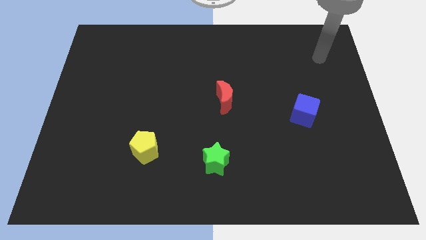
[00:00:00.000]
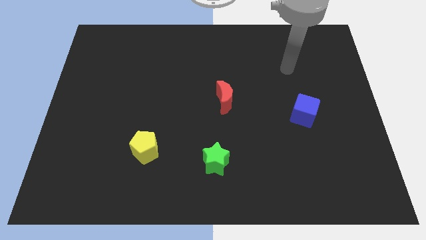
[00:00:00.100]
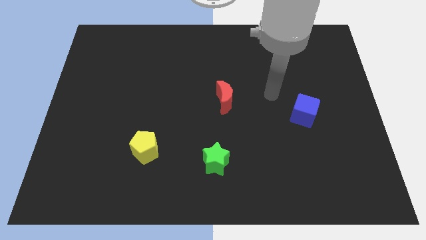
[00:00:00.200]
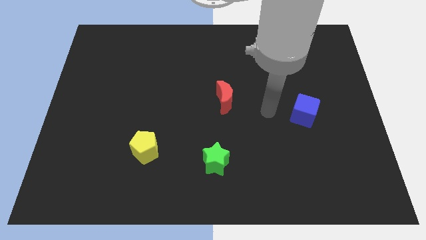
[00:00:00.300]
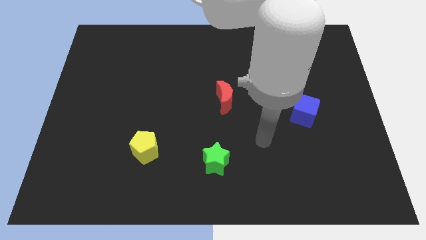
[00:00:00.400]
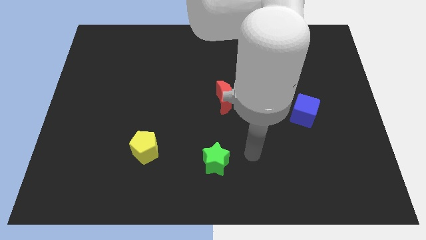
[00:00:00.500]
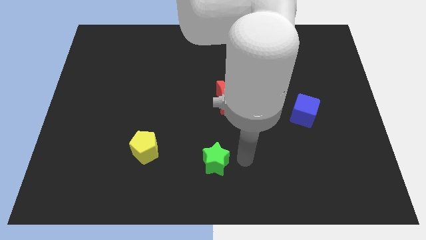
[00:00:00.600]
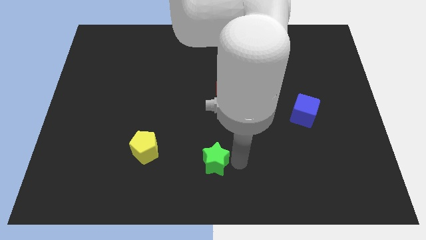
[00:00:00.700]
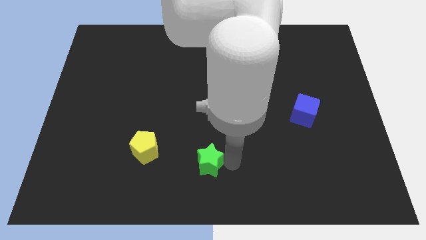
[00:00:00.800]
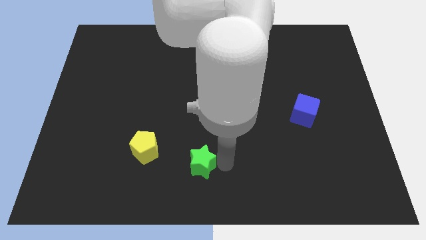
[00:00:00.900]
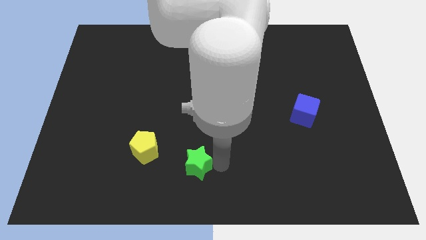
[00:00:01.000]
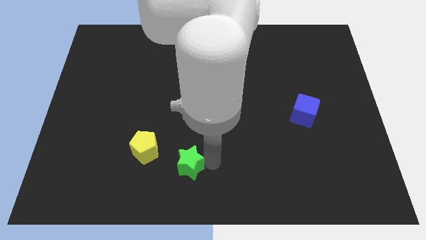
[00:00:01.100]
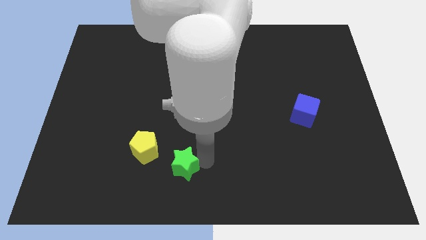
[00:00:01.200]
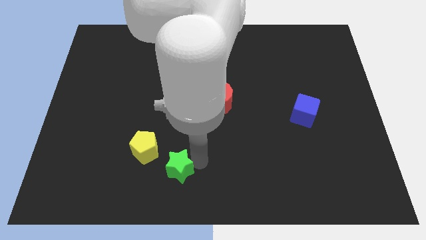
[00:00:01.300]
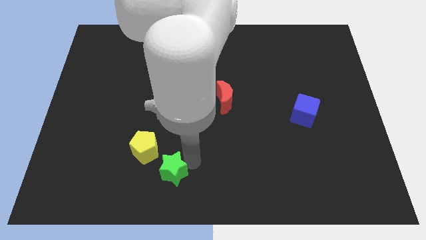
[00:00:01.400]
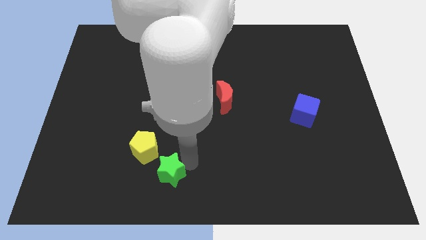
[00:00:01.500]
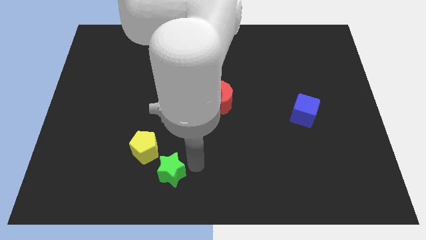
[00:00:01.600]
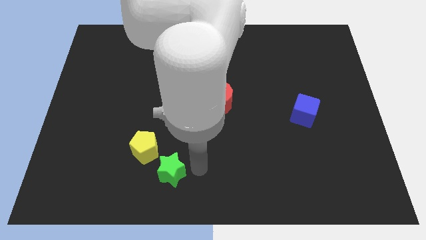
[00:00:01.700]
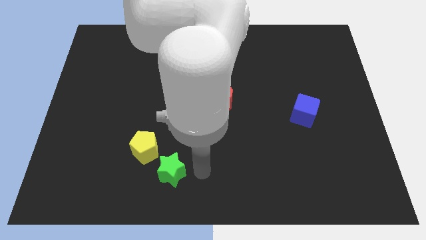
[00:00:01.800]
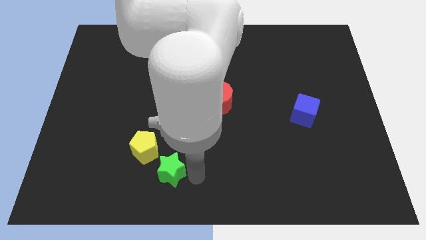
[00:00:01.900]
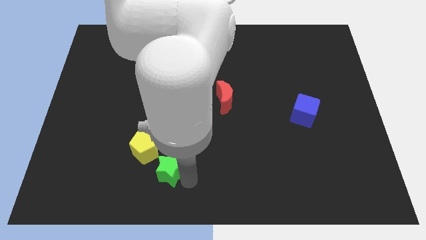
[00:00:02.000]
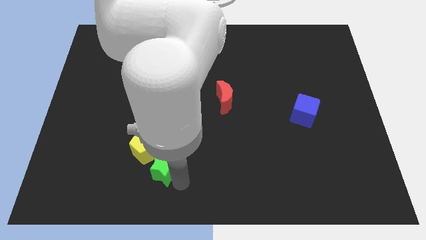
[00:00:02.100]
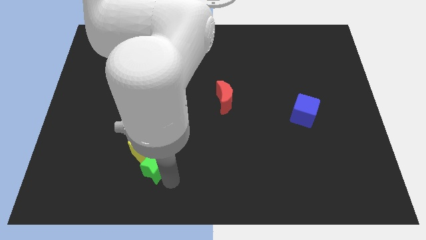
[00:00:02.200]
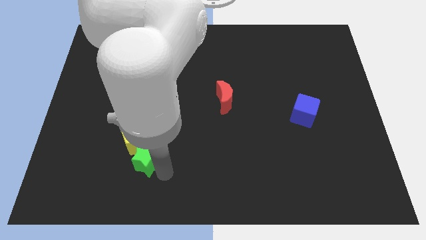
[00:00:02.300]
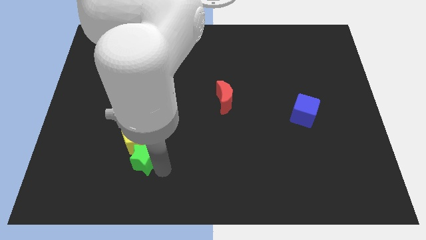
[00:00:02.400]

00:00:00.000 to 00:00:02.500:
slide the green block towards the pentagon

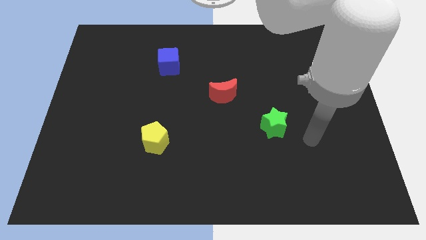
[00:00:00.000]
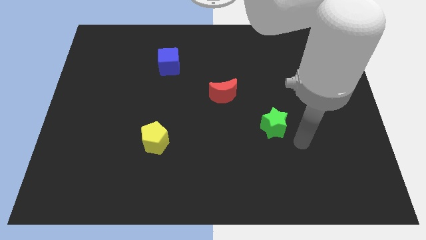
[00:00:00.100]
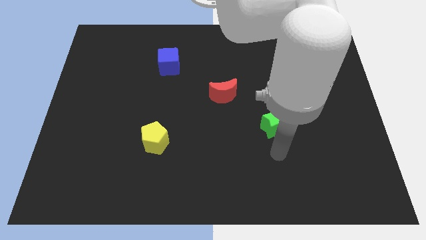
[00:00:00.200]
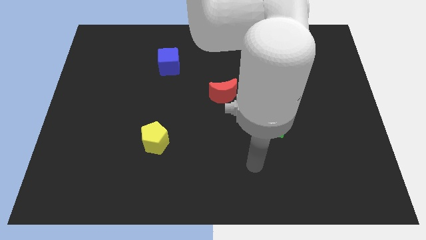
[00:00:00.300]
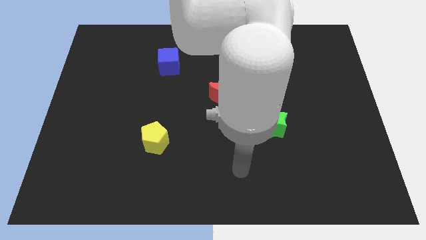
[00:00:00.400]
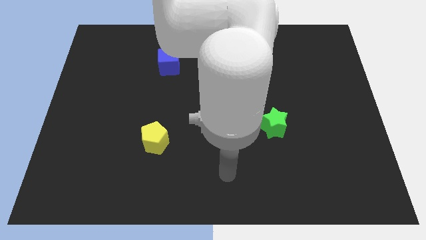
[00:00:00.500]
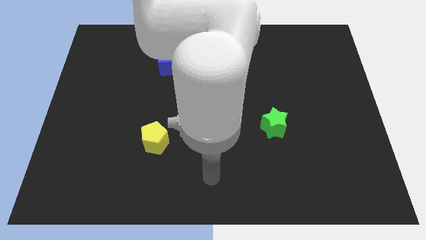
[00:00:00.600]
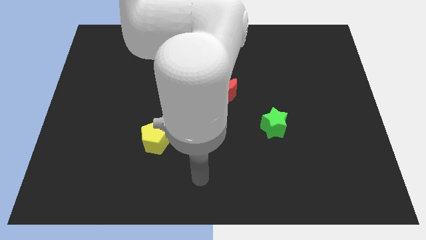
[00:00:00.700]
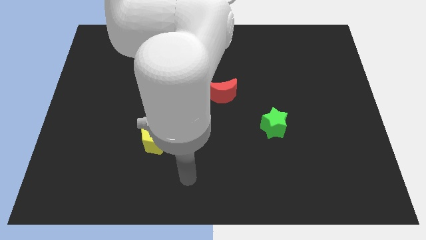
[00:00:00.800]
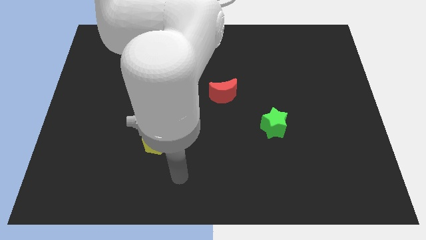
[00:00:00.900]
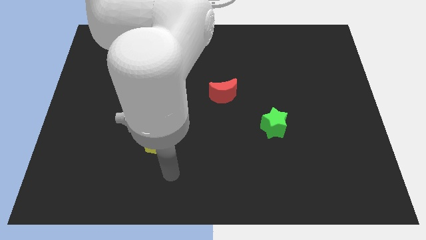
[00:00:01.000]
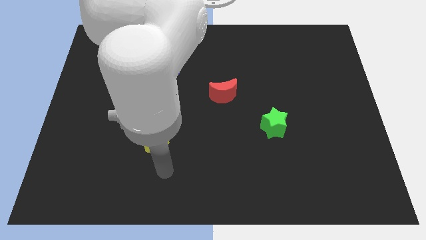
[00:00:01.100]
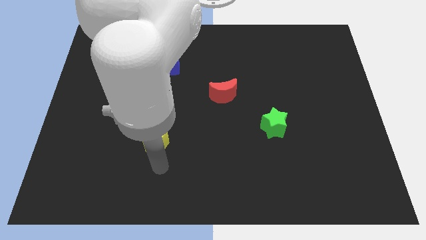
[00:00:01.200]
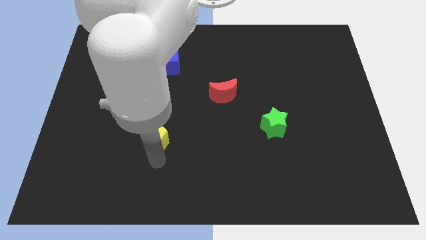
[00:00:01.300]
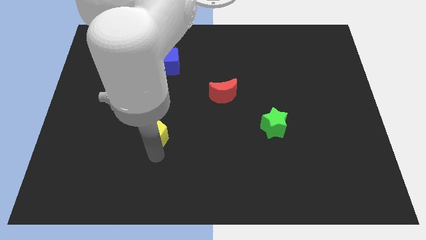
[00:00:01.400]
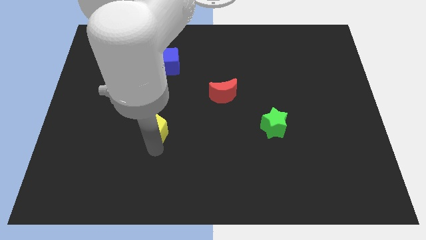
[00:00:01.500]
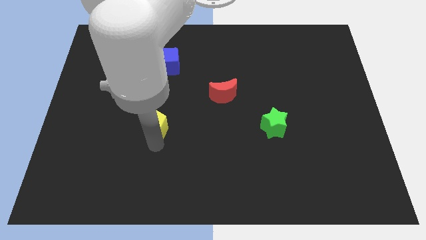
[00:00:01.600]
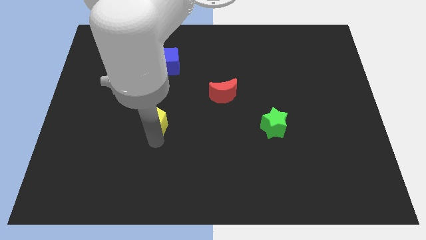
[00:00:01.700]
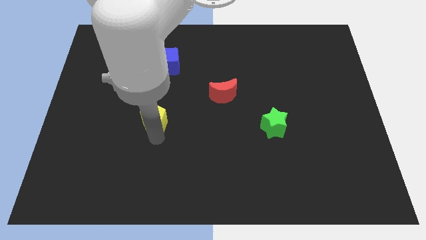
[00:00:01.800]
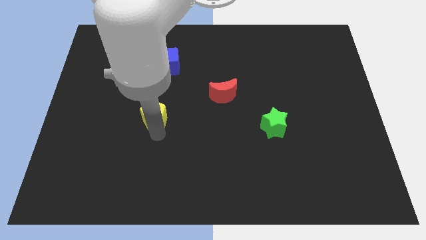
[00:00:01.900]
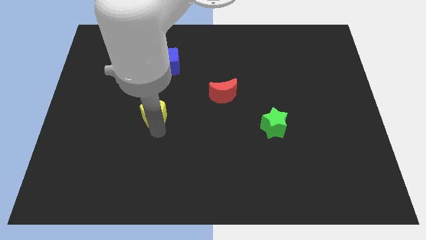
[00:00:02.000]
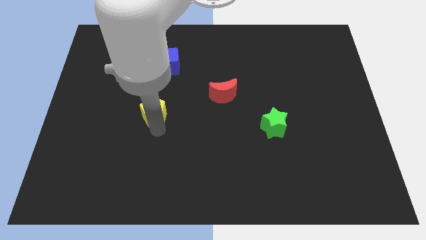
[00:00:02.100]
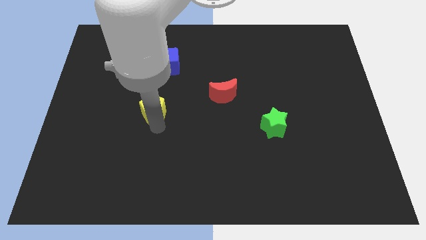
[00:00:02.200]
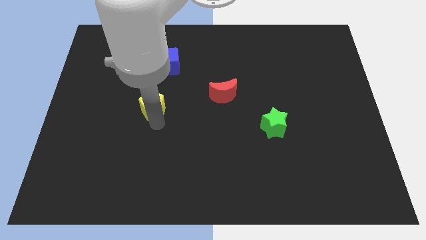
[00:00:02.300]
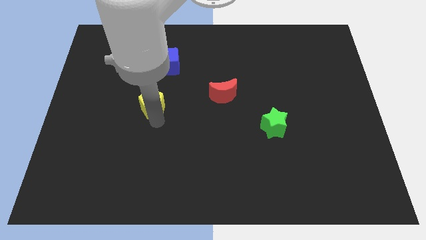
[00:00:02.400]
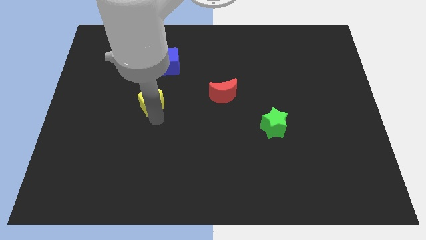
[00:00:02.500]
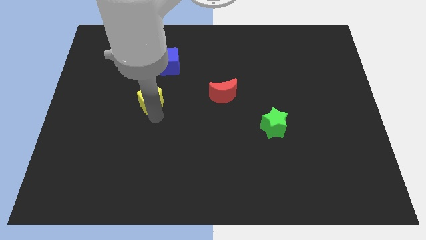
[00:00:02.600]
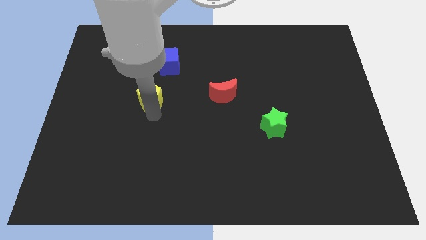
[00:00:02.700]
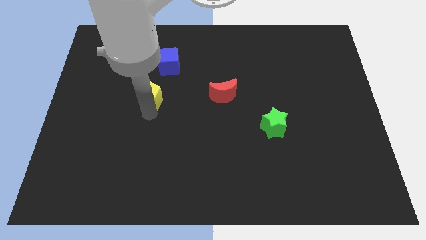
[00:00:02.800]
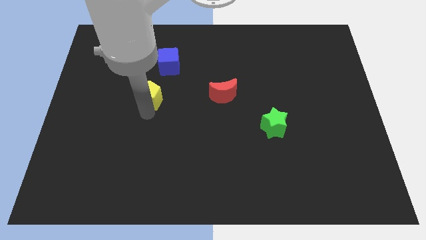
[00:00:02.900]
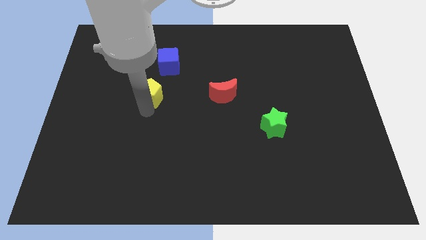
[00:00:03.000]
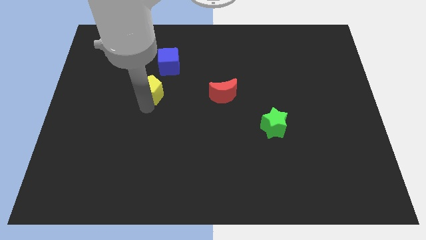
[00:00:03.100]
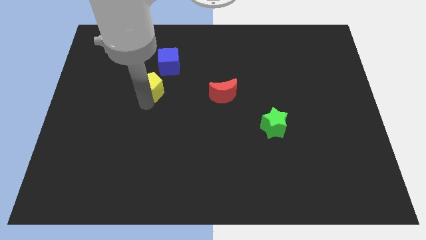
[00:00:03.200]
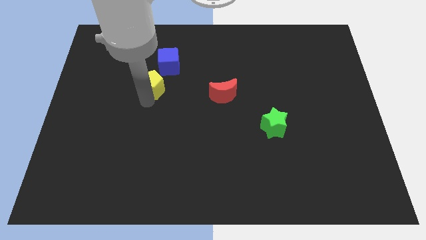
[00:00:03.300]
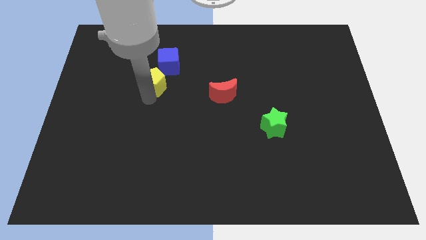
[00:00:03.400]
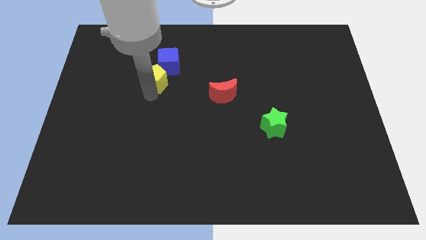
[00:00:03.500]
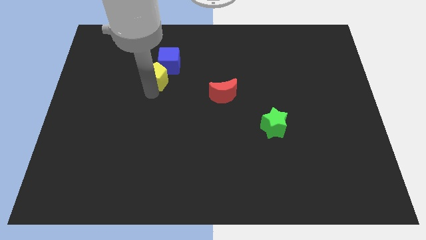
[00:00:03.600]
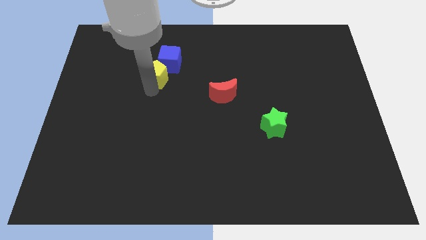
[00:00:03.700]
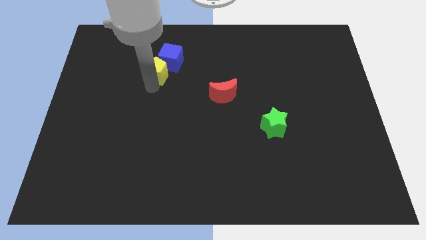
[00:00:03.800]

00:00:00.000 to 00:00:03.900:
move the yellow pentagon to the blue block

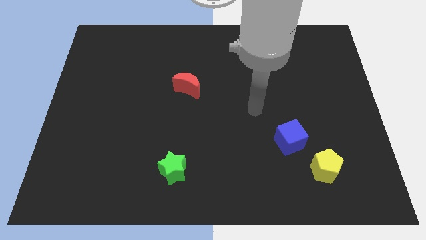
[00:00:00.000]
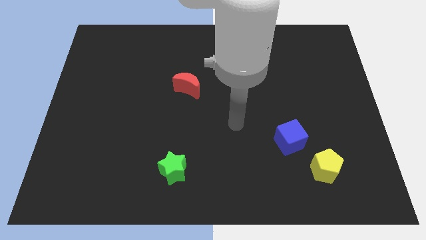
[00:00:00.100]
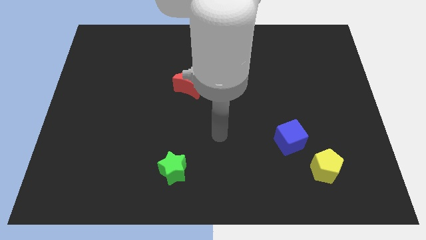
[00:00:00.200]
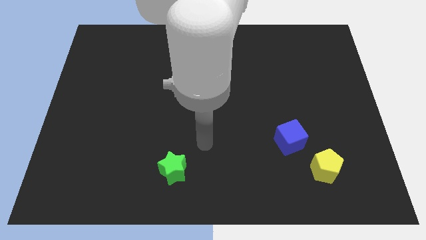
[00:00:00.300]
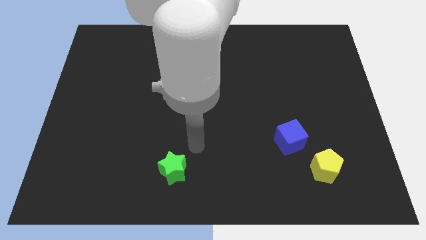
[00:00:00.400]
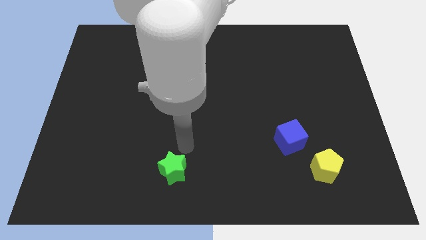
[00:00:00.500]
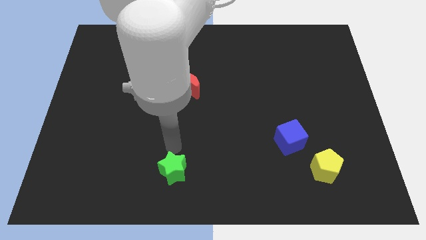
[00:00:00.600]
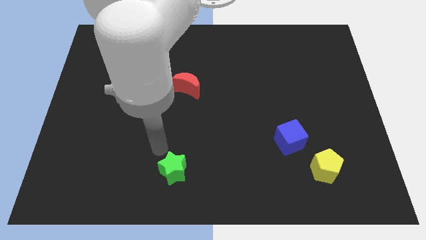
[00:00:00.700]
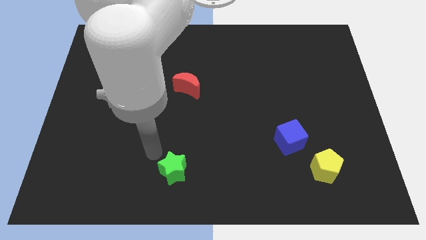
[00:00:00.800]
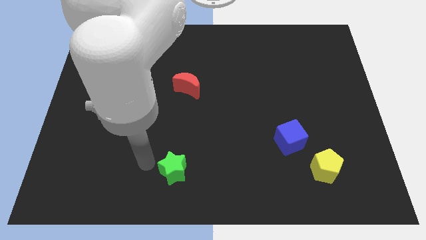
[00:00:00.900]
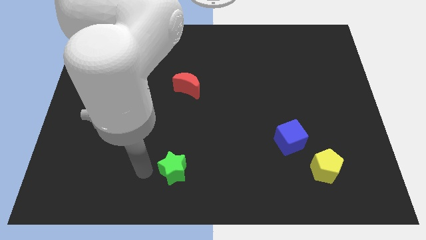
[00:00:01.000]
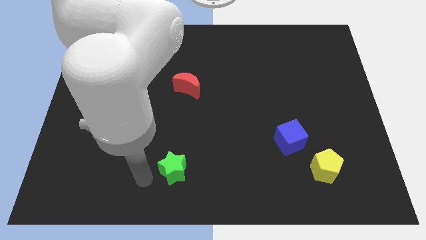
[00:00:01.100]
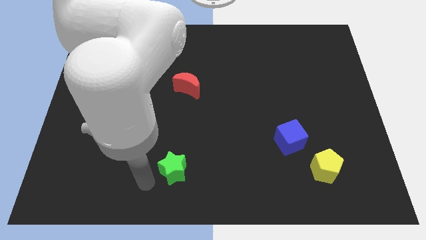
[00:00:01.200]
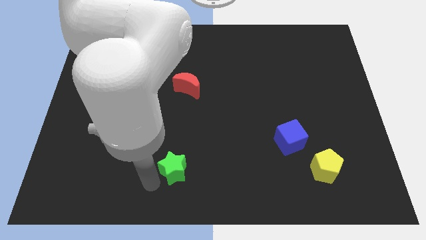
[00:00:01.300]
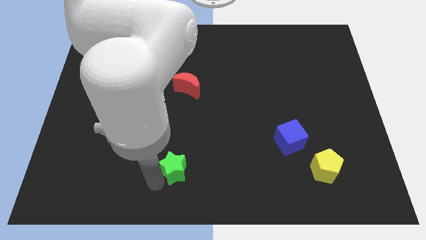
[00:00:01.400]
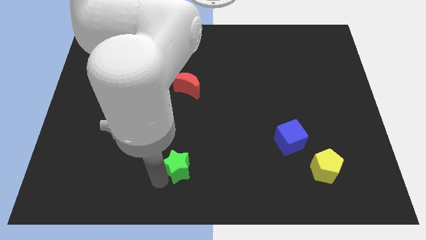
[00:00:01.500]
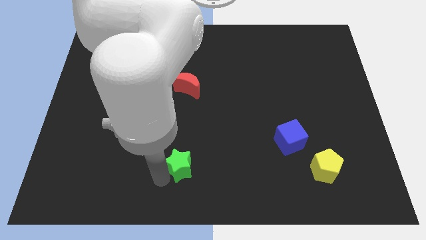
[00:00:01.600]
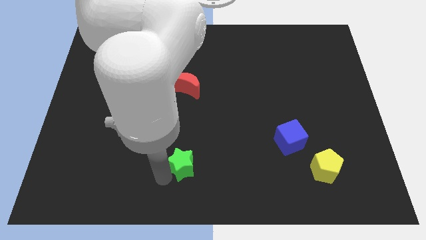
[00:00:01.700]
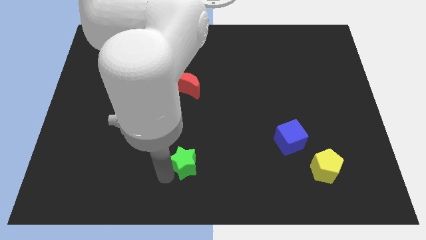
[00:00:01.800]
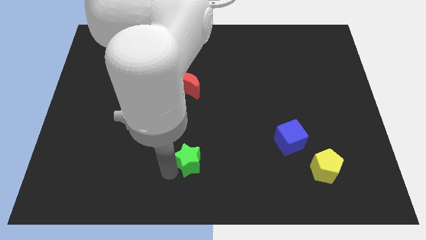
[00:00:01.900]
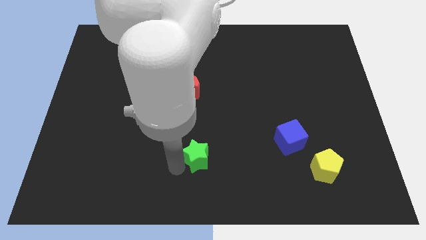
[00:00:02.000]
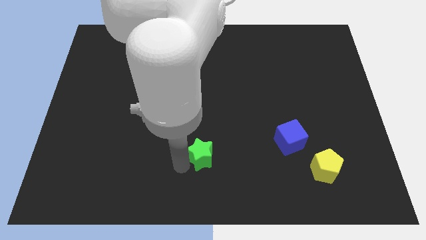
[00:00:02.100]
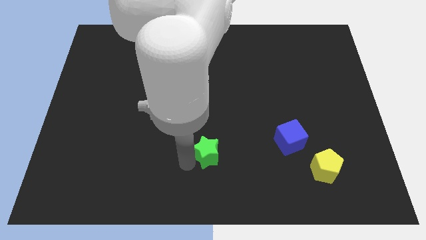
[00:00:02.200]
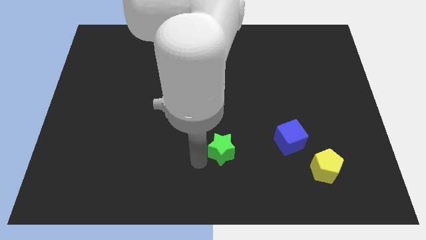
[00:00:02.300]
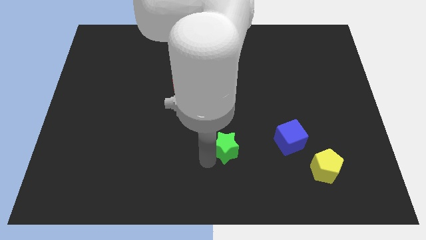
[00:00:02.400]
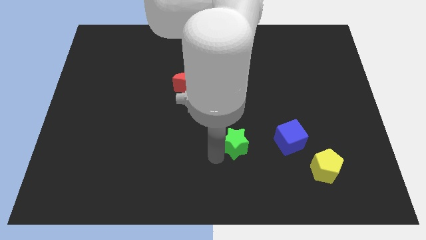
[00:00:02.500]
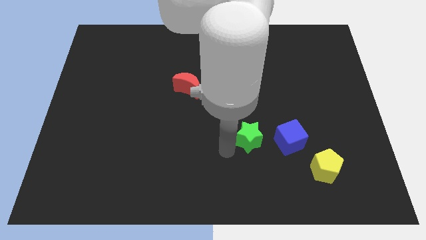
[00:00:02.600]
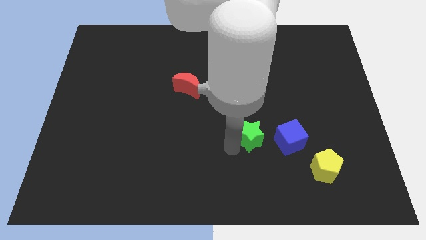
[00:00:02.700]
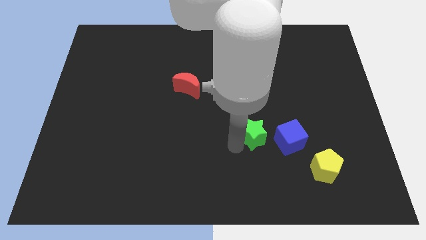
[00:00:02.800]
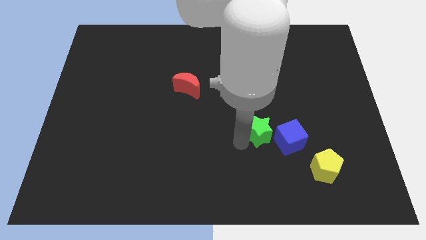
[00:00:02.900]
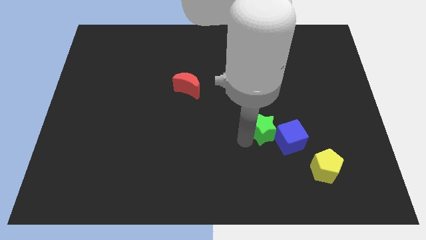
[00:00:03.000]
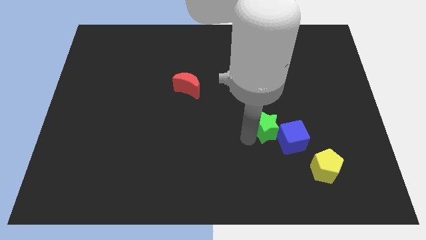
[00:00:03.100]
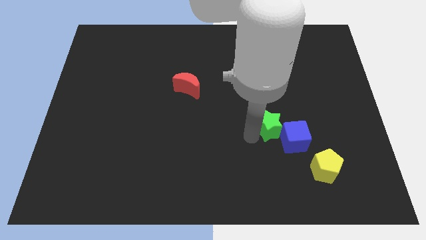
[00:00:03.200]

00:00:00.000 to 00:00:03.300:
move the star towards the blue block
